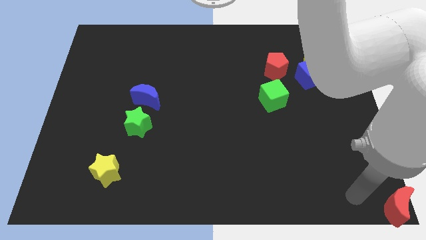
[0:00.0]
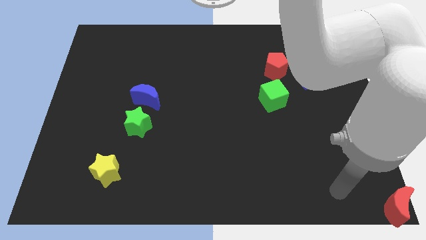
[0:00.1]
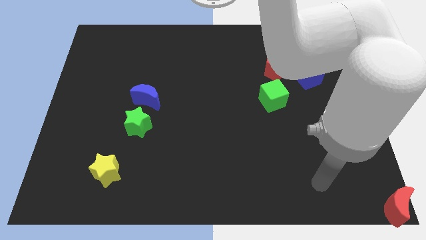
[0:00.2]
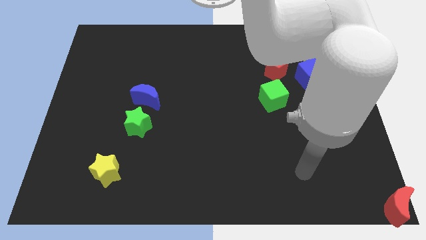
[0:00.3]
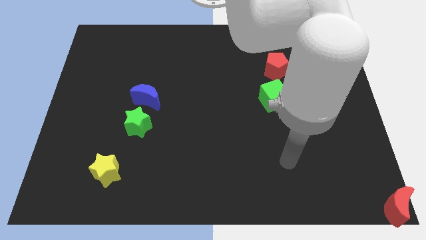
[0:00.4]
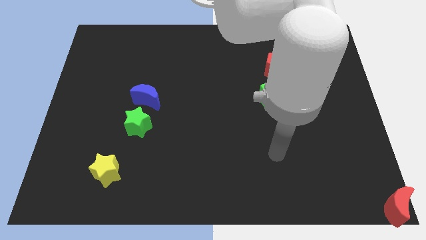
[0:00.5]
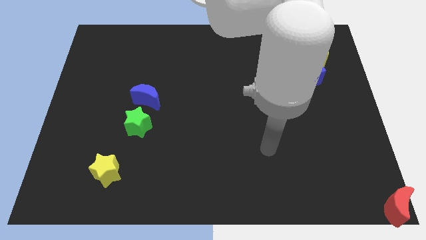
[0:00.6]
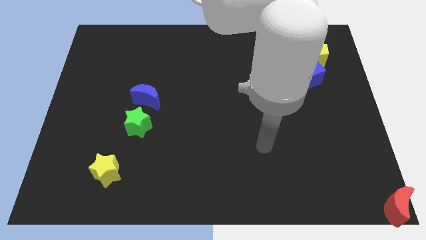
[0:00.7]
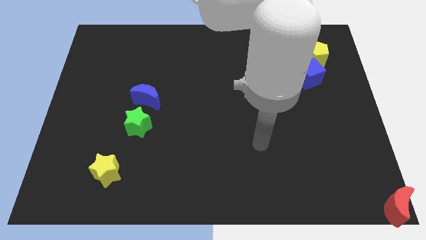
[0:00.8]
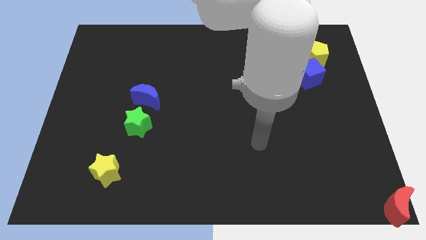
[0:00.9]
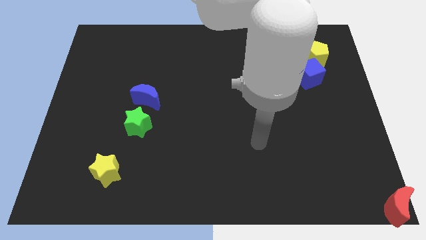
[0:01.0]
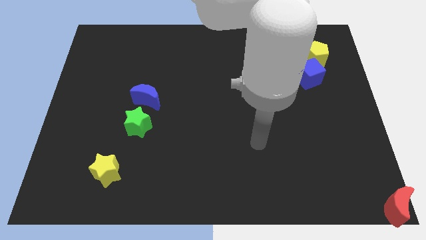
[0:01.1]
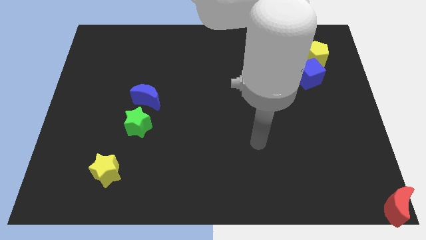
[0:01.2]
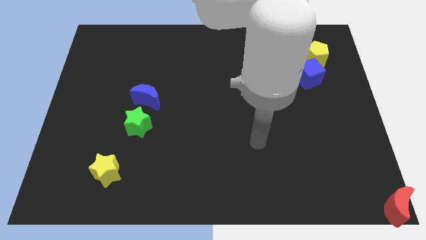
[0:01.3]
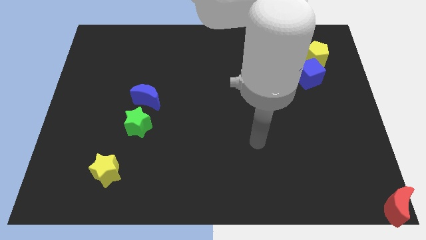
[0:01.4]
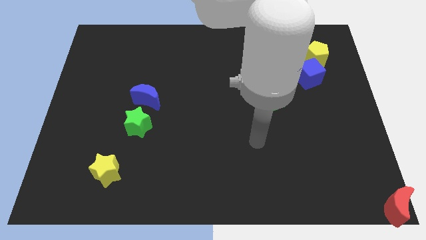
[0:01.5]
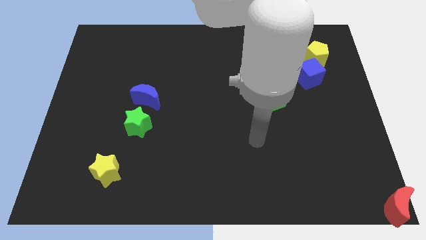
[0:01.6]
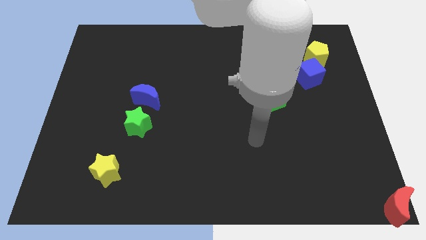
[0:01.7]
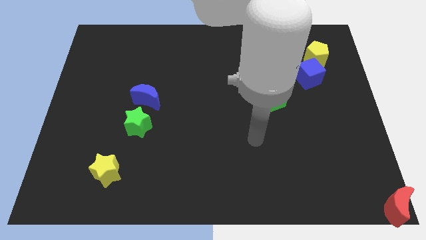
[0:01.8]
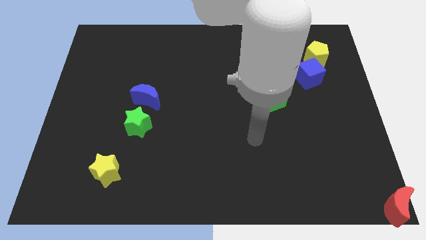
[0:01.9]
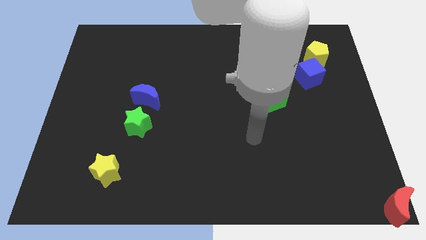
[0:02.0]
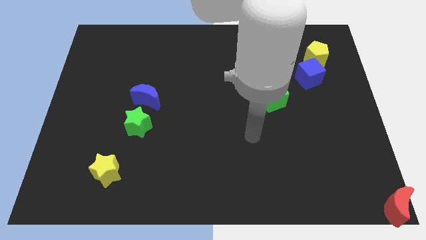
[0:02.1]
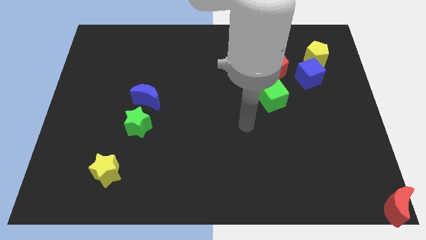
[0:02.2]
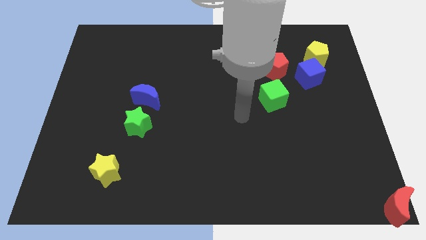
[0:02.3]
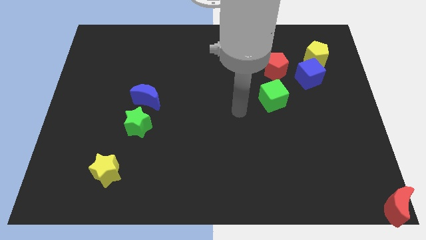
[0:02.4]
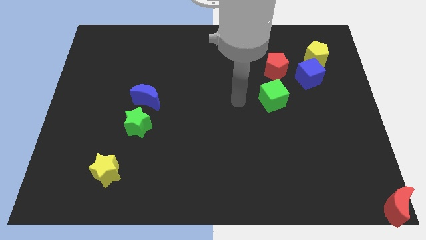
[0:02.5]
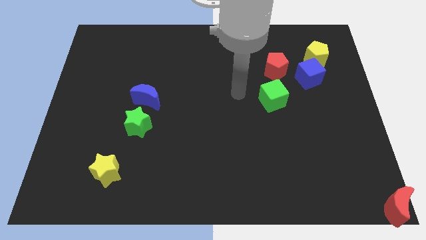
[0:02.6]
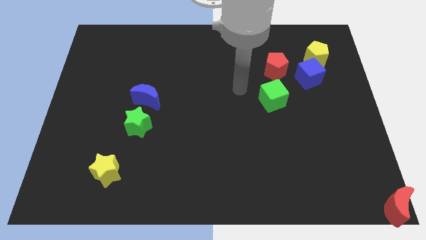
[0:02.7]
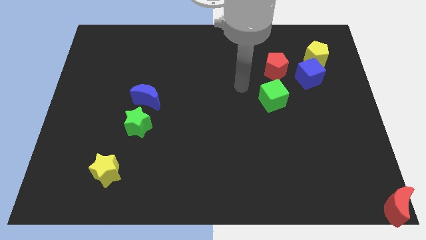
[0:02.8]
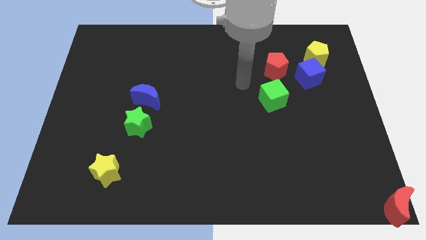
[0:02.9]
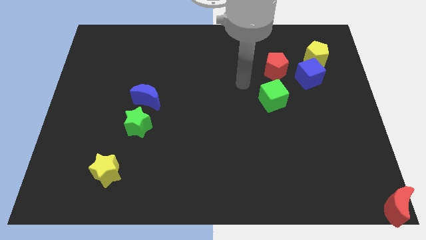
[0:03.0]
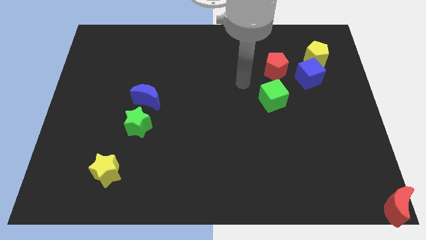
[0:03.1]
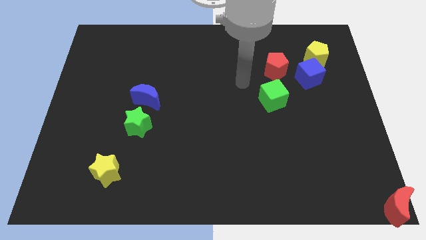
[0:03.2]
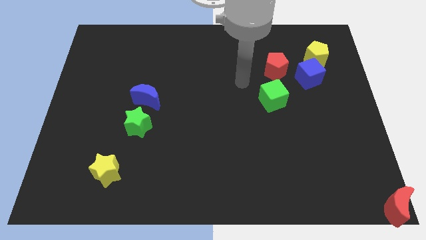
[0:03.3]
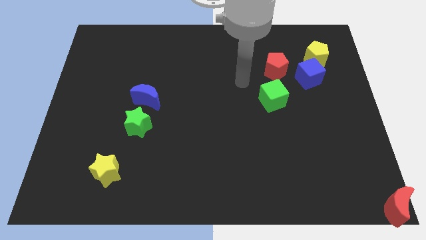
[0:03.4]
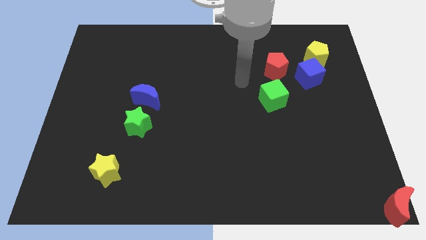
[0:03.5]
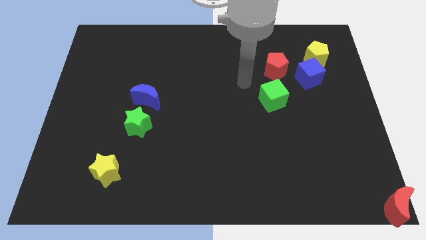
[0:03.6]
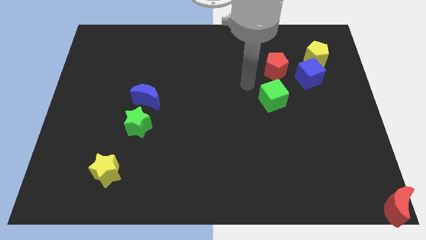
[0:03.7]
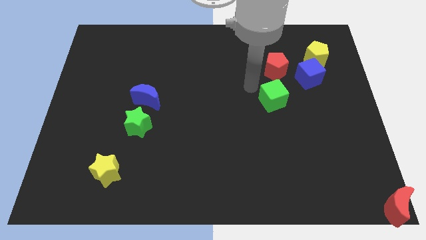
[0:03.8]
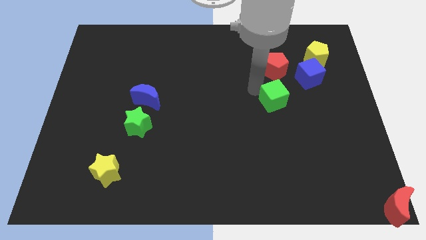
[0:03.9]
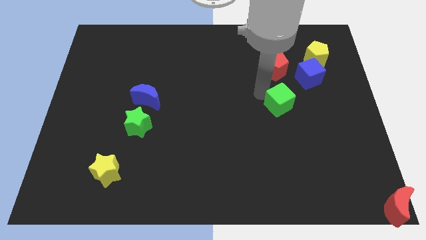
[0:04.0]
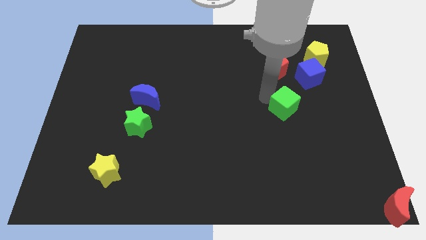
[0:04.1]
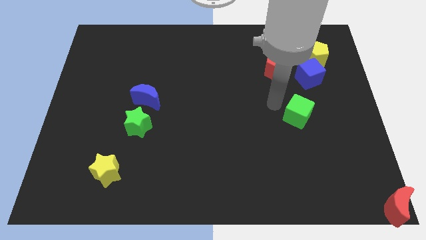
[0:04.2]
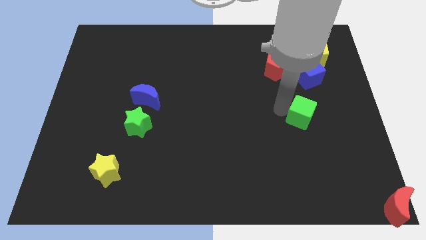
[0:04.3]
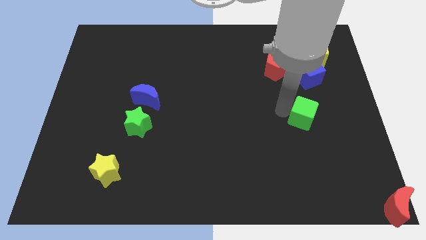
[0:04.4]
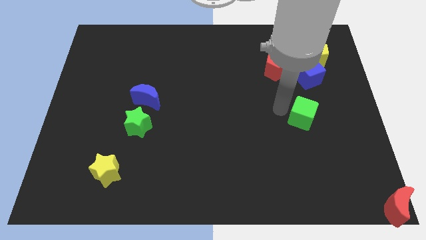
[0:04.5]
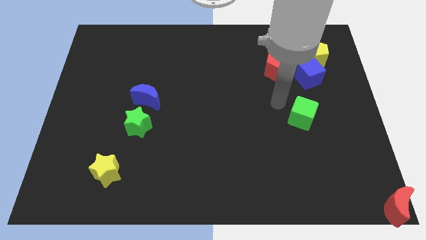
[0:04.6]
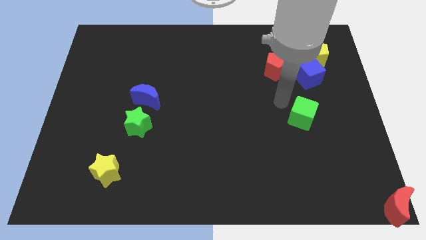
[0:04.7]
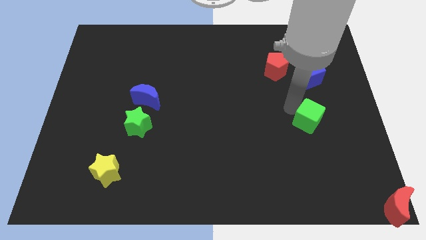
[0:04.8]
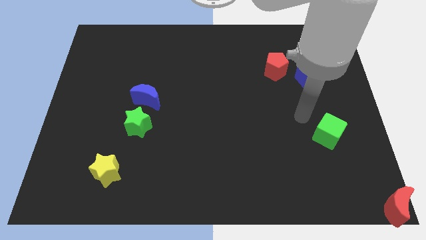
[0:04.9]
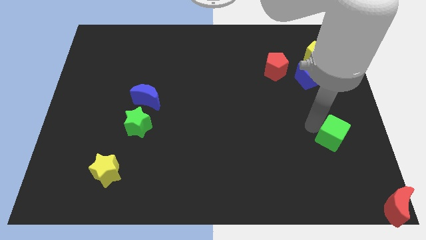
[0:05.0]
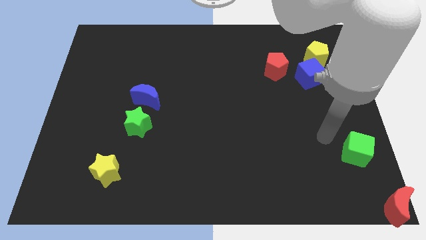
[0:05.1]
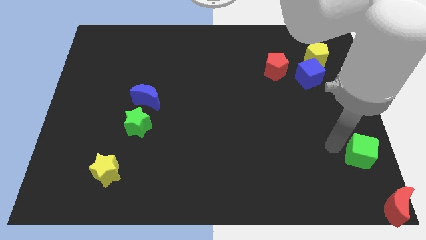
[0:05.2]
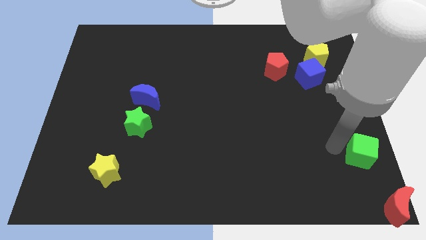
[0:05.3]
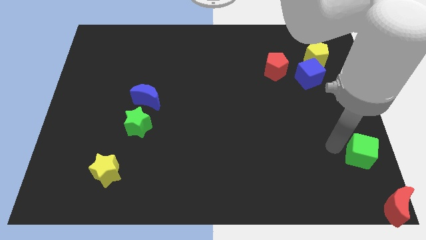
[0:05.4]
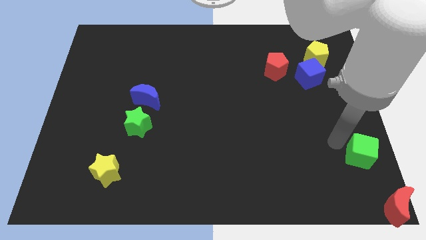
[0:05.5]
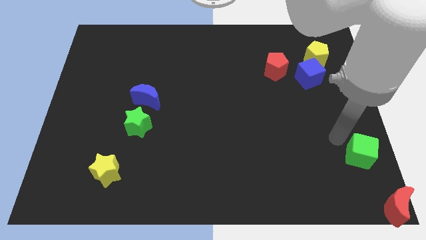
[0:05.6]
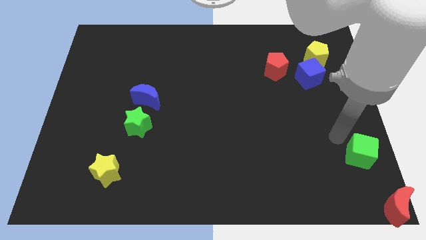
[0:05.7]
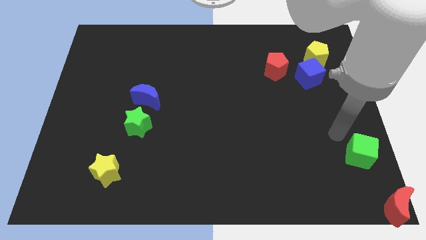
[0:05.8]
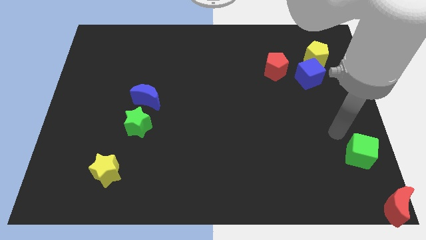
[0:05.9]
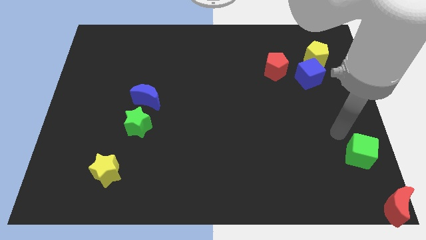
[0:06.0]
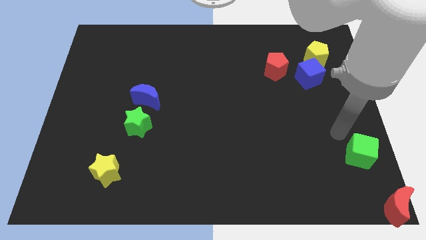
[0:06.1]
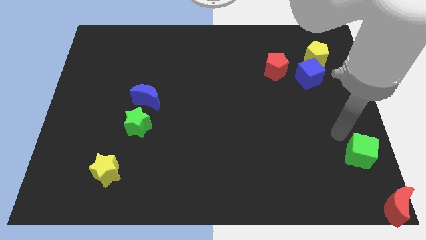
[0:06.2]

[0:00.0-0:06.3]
separate the green cube from the red pentagon

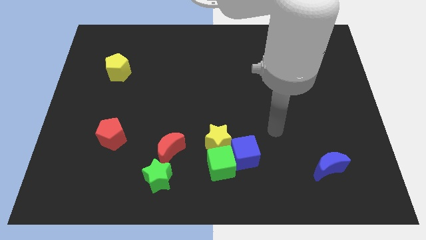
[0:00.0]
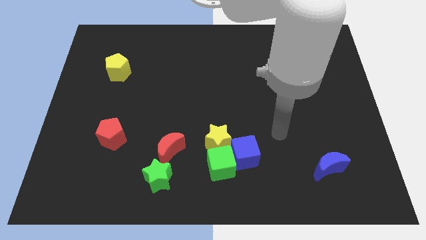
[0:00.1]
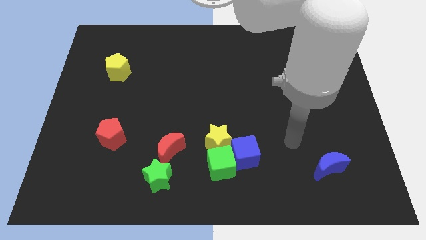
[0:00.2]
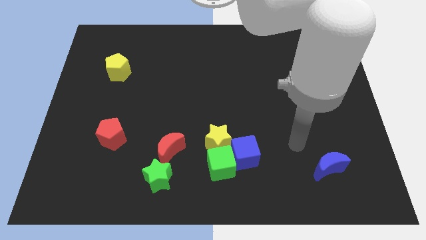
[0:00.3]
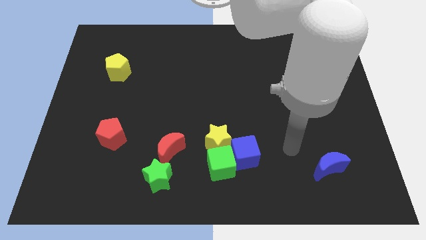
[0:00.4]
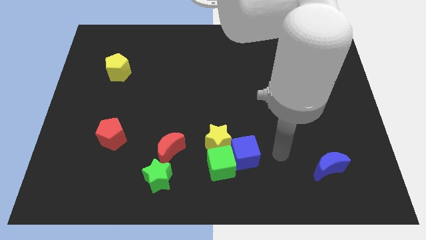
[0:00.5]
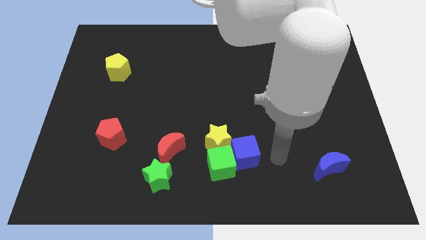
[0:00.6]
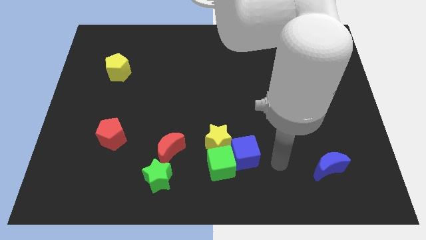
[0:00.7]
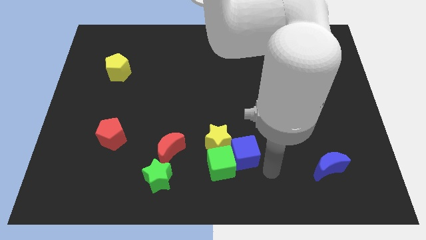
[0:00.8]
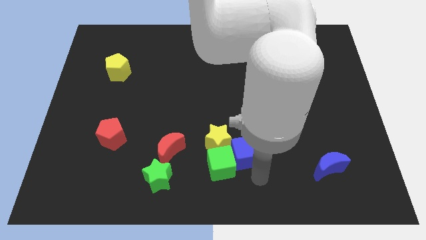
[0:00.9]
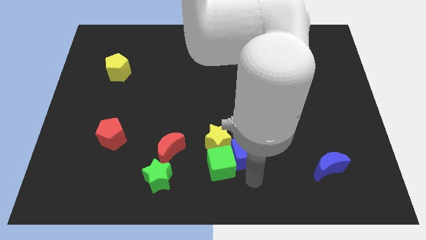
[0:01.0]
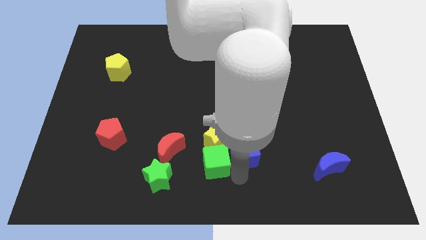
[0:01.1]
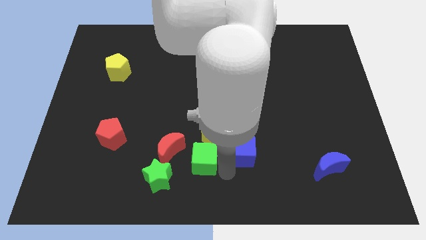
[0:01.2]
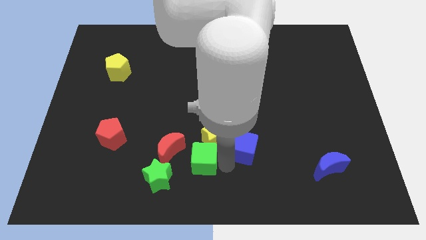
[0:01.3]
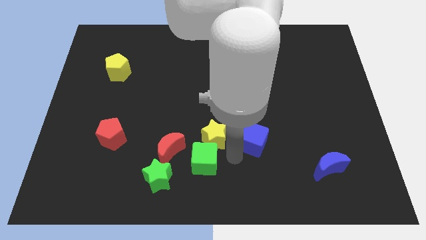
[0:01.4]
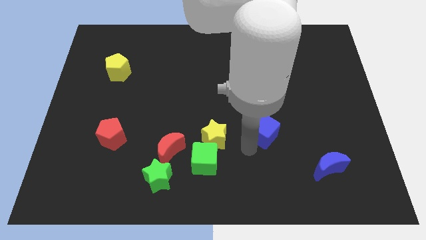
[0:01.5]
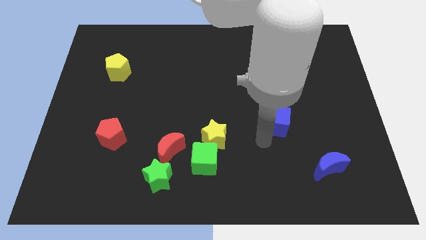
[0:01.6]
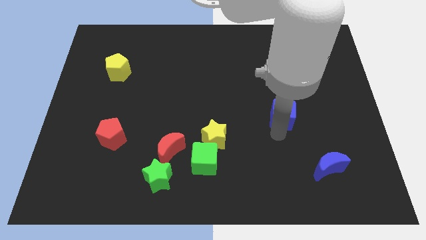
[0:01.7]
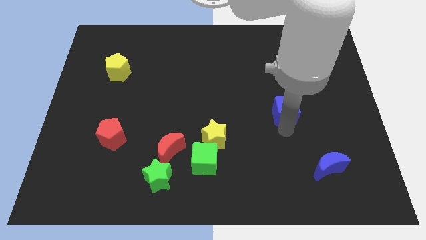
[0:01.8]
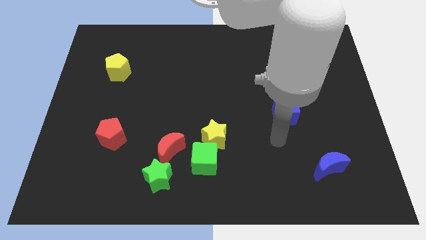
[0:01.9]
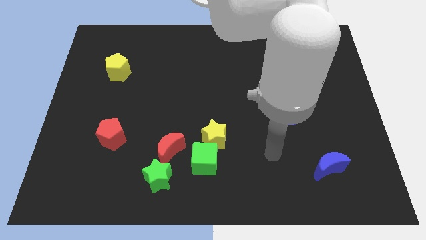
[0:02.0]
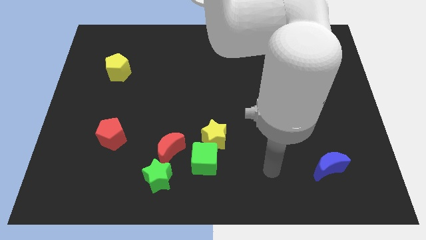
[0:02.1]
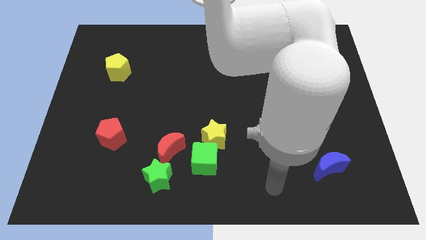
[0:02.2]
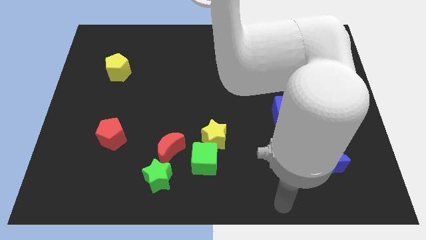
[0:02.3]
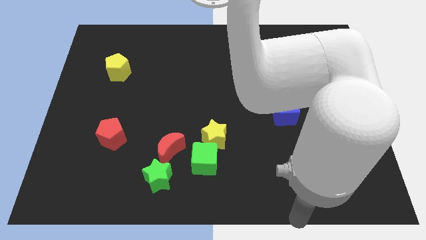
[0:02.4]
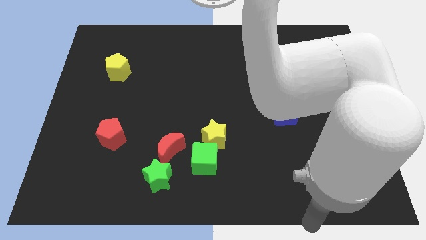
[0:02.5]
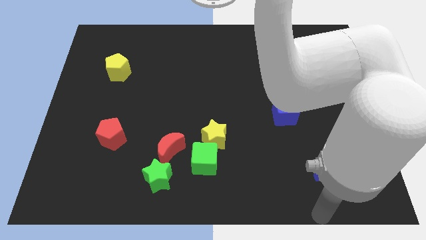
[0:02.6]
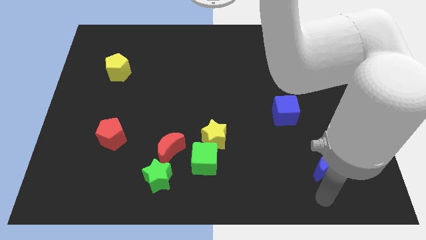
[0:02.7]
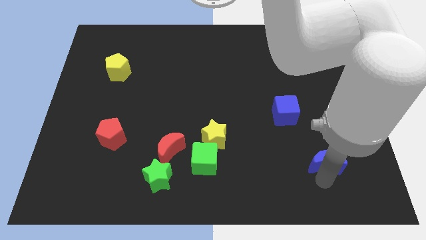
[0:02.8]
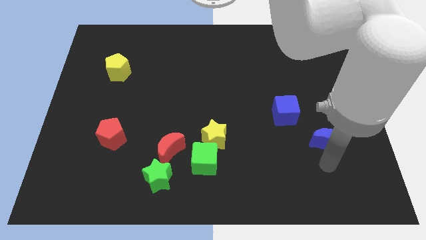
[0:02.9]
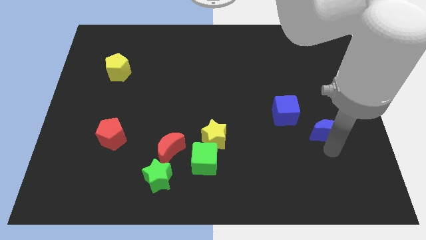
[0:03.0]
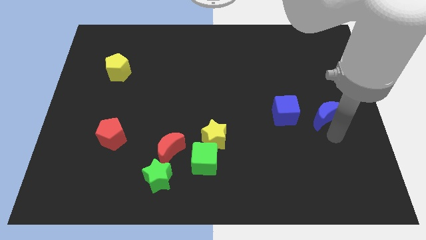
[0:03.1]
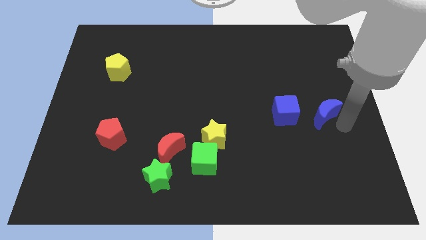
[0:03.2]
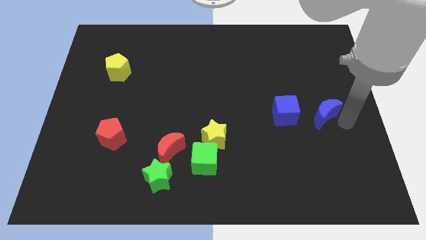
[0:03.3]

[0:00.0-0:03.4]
place the blue cube and blue moon in a horizontal line at the center right side of the board
